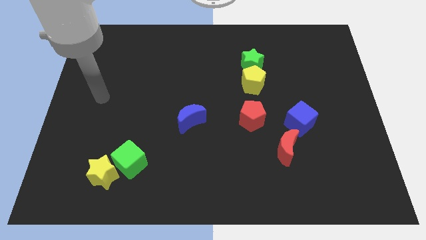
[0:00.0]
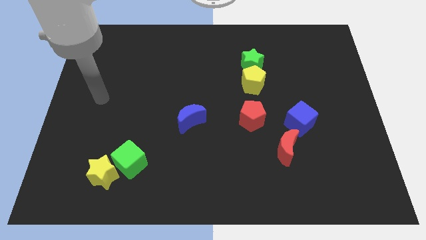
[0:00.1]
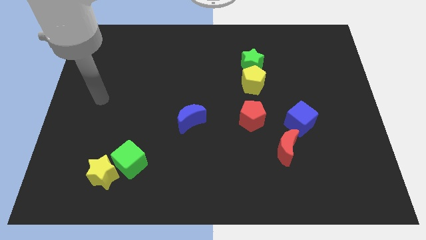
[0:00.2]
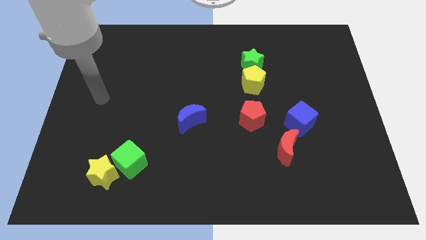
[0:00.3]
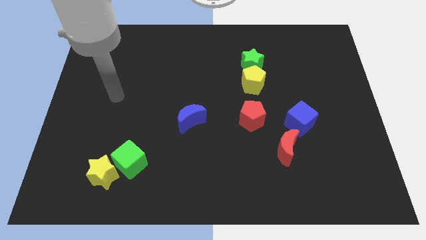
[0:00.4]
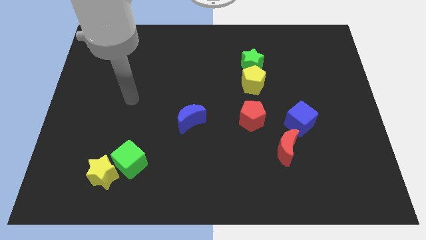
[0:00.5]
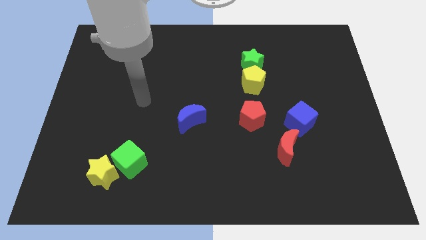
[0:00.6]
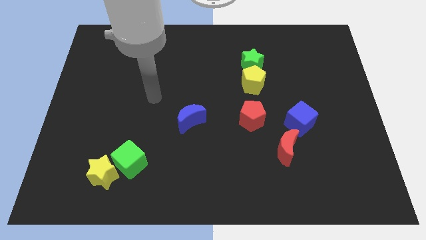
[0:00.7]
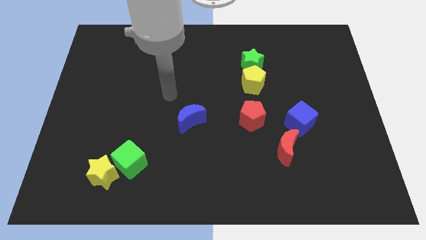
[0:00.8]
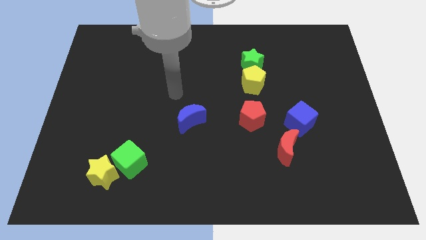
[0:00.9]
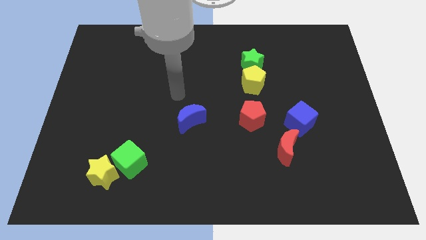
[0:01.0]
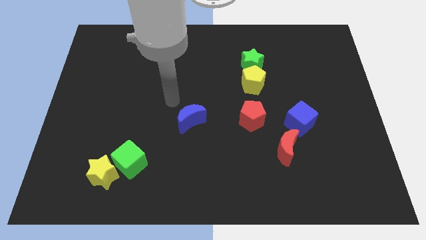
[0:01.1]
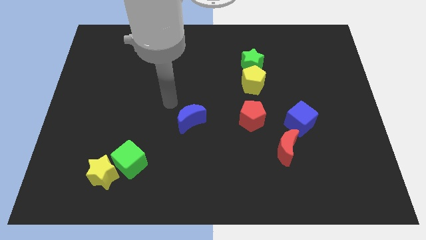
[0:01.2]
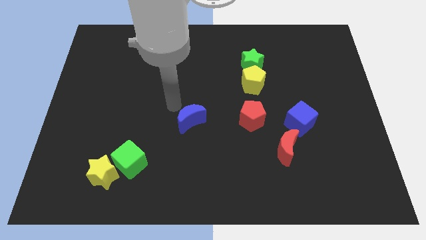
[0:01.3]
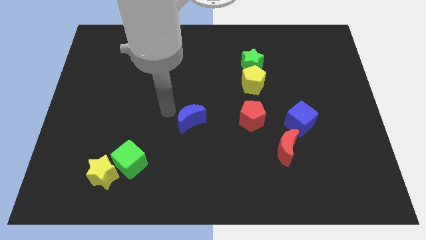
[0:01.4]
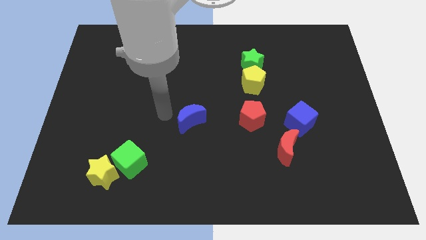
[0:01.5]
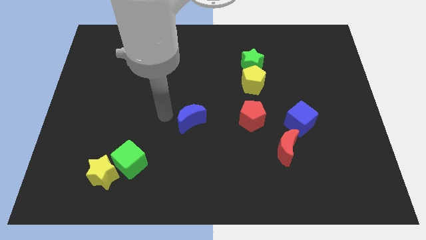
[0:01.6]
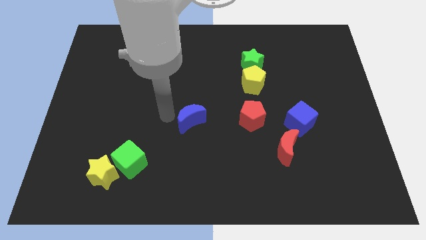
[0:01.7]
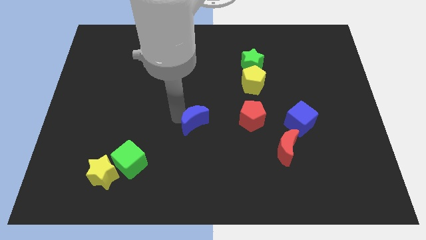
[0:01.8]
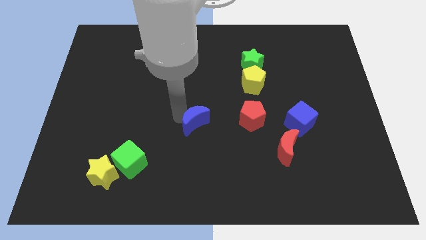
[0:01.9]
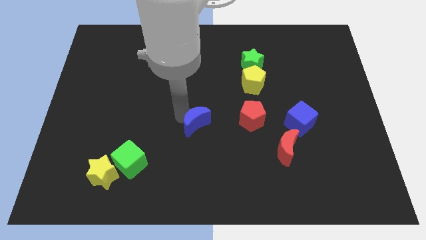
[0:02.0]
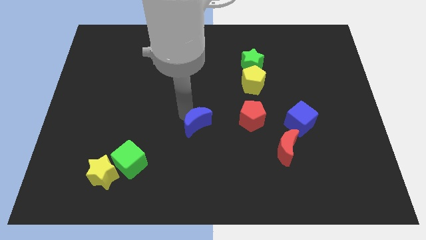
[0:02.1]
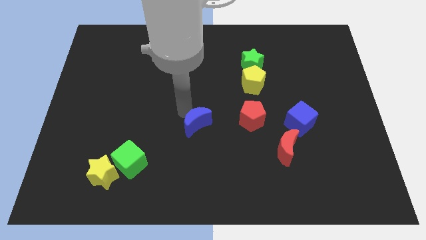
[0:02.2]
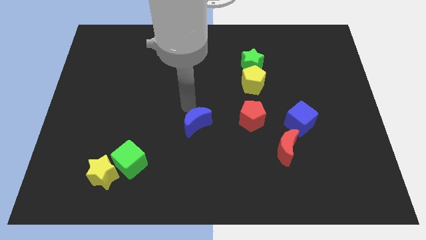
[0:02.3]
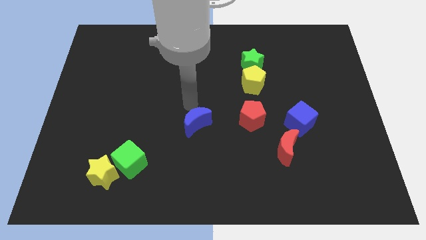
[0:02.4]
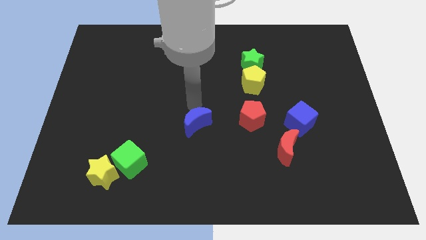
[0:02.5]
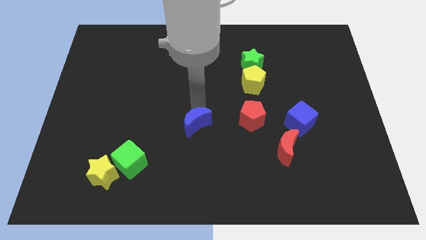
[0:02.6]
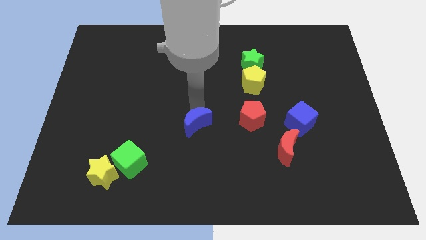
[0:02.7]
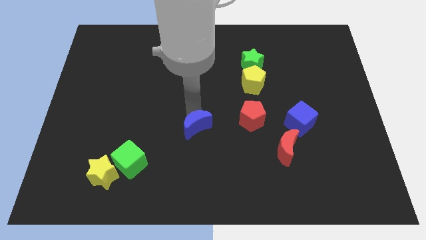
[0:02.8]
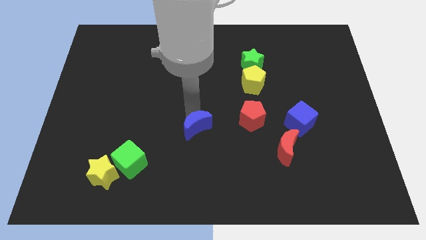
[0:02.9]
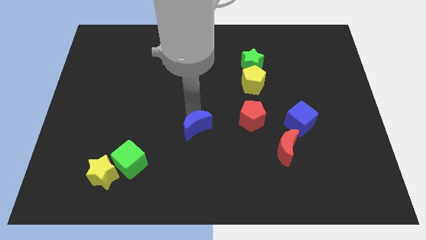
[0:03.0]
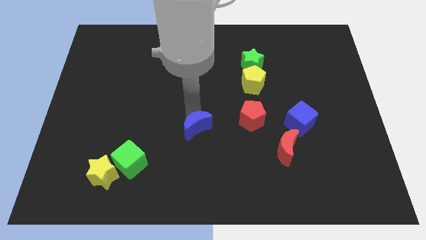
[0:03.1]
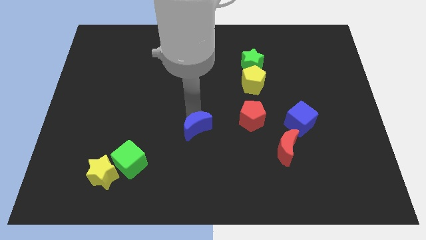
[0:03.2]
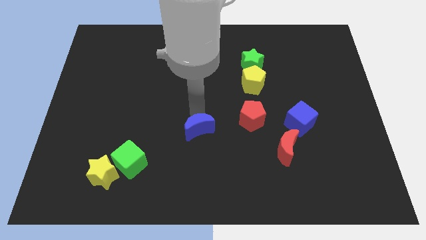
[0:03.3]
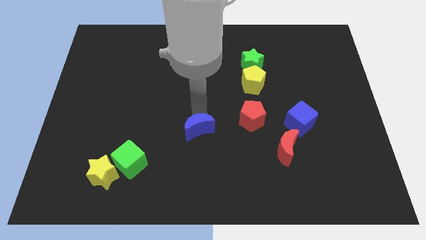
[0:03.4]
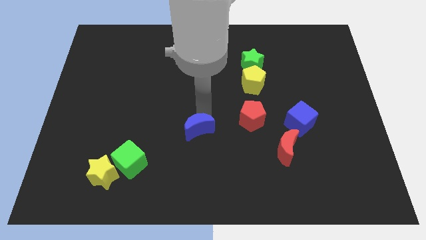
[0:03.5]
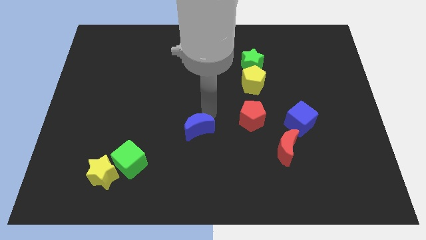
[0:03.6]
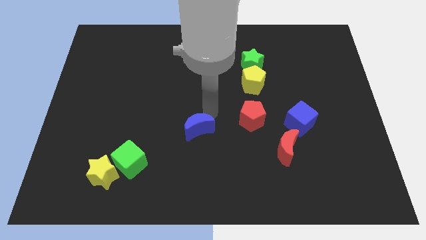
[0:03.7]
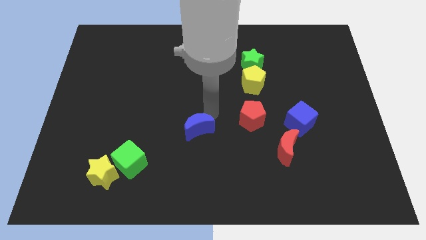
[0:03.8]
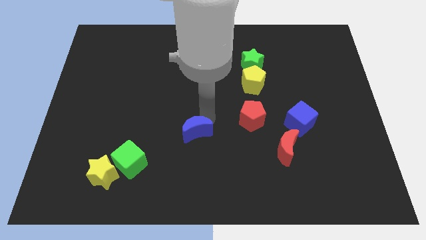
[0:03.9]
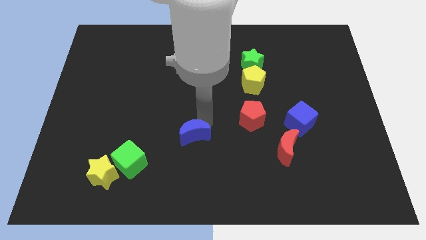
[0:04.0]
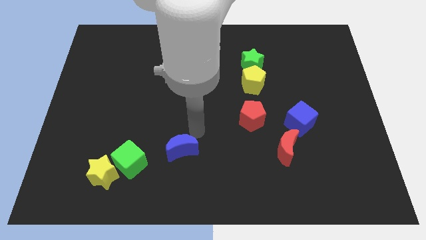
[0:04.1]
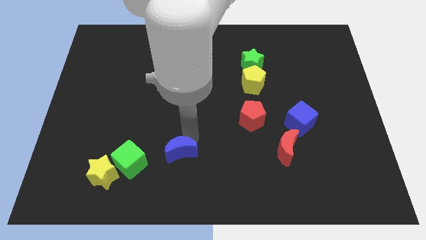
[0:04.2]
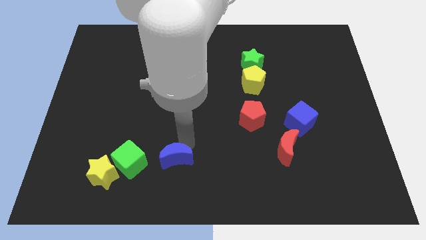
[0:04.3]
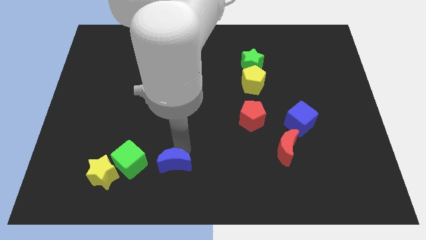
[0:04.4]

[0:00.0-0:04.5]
place the blue cube to the right side of the green cube

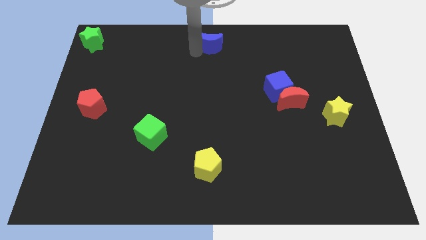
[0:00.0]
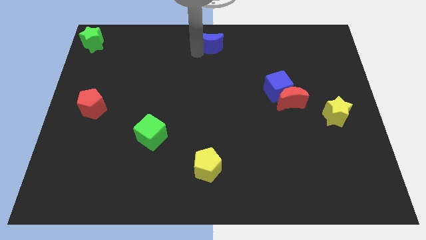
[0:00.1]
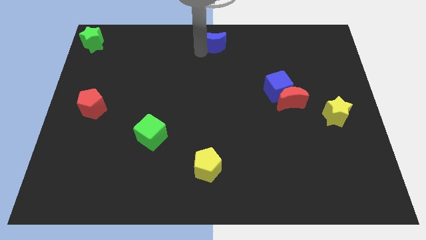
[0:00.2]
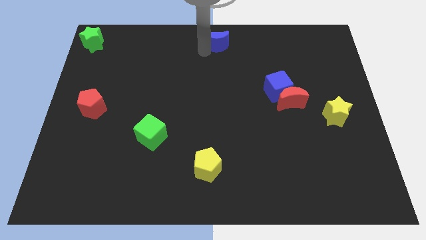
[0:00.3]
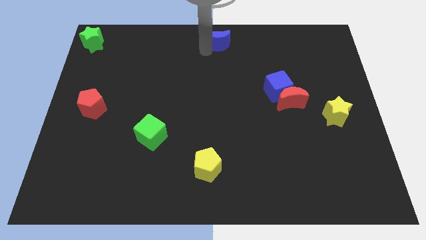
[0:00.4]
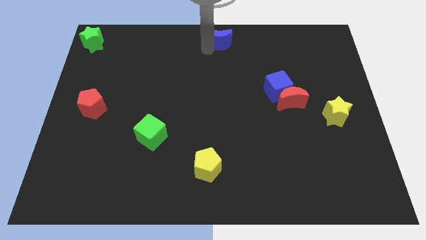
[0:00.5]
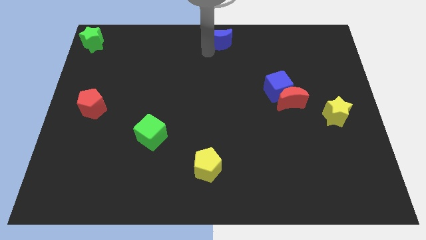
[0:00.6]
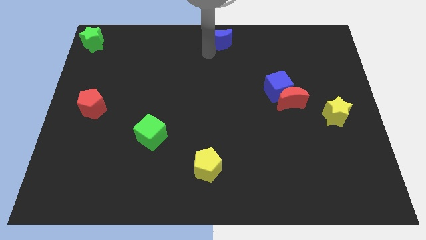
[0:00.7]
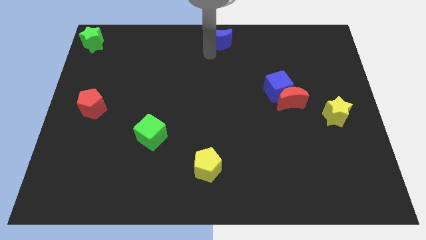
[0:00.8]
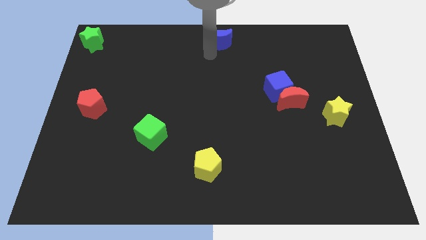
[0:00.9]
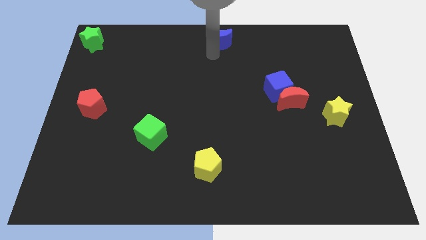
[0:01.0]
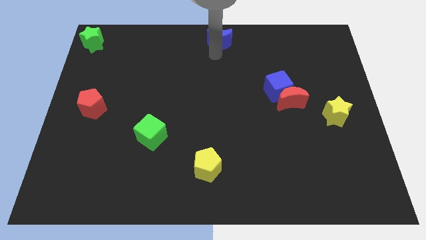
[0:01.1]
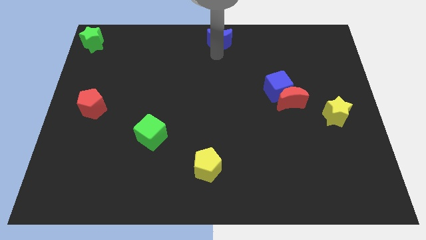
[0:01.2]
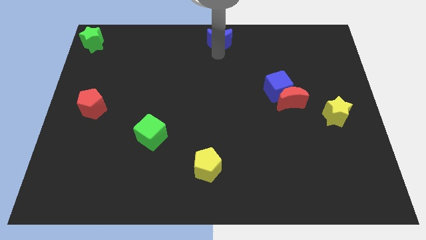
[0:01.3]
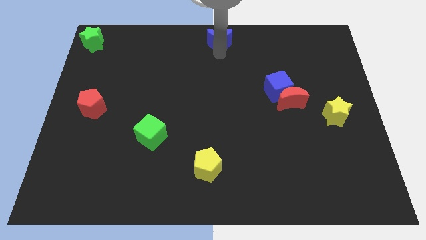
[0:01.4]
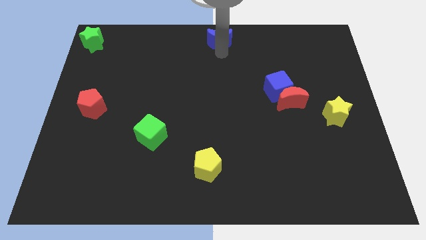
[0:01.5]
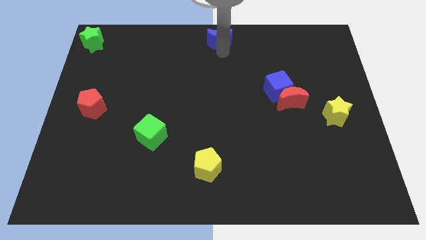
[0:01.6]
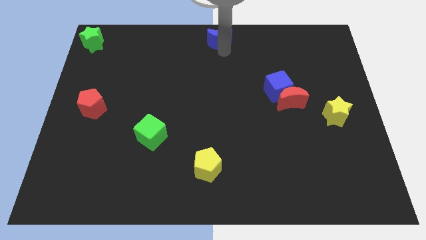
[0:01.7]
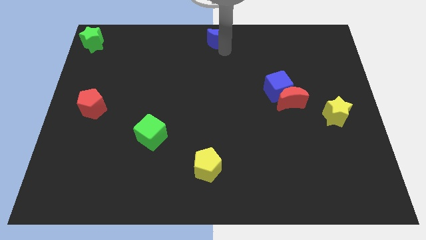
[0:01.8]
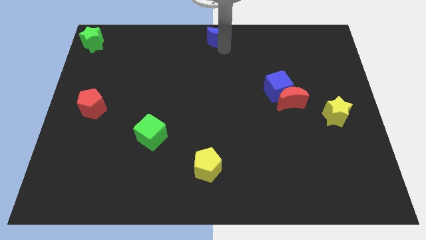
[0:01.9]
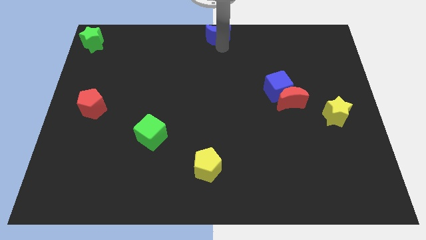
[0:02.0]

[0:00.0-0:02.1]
place blue moon at the top center of the board

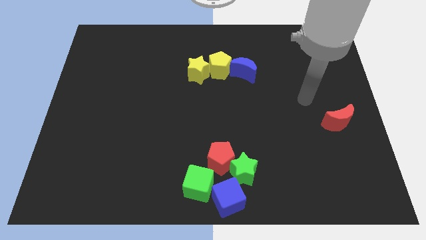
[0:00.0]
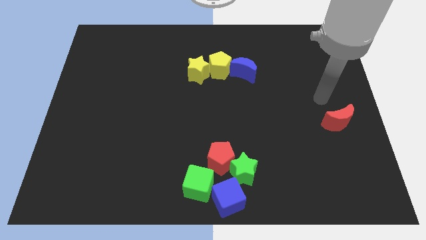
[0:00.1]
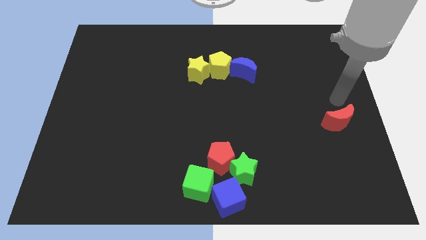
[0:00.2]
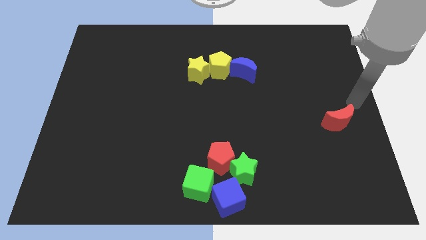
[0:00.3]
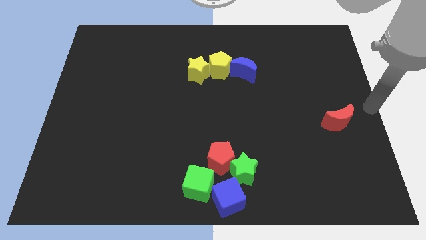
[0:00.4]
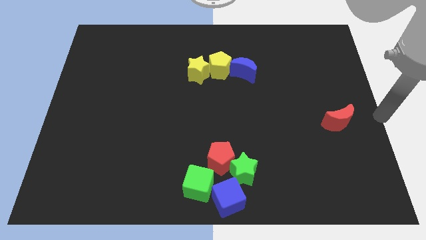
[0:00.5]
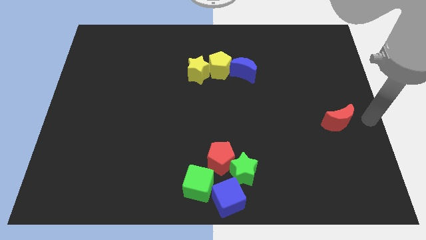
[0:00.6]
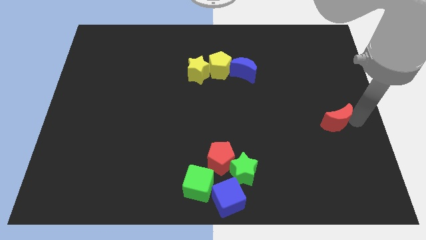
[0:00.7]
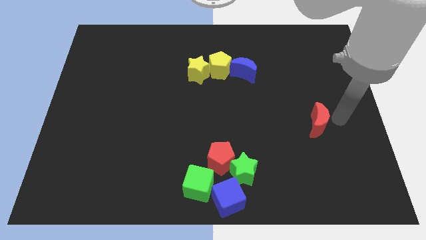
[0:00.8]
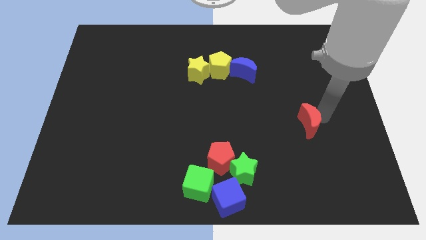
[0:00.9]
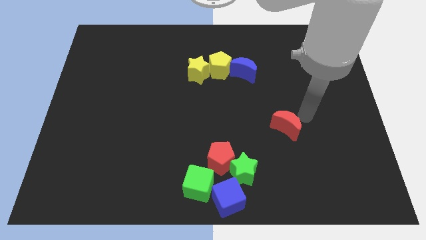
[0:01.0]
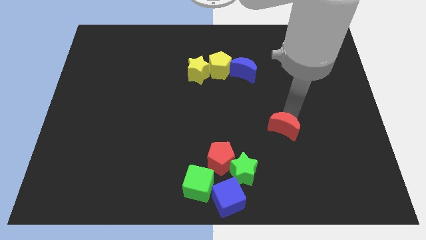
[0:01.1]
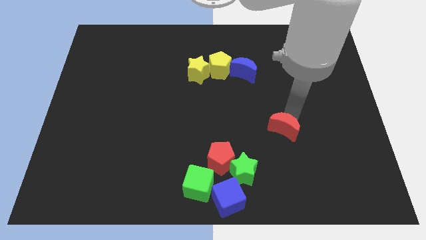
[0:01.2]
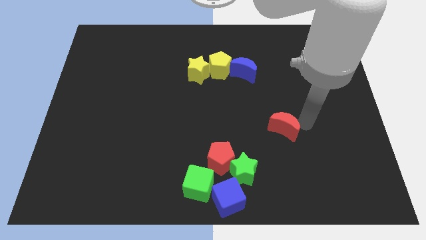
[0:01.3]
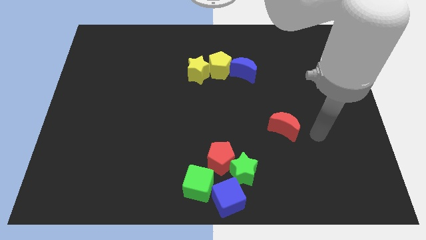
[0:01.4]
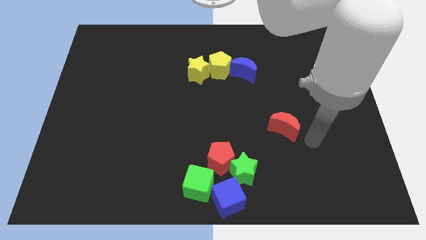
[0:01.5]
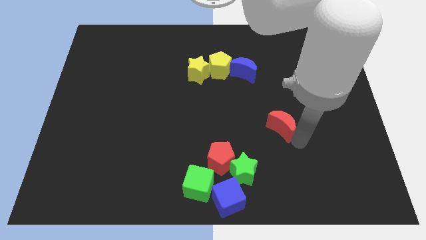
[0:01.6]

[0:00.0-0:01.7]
move the red crescent slightly left side

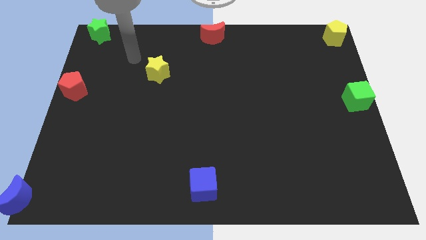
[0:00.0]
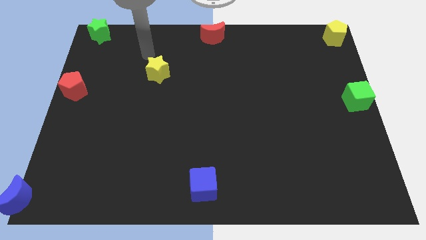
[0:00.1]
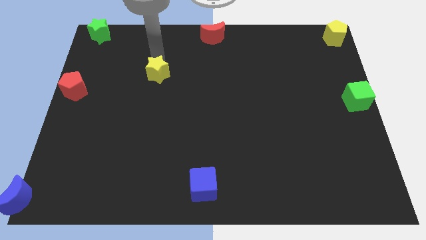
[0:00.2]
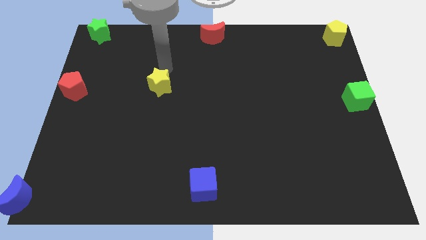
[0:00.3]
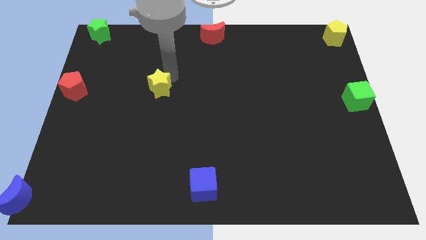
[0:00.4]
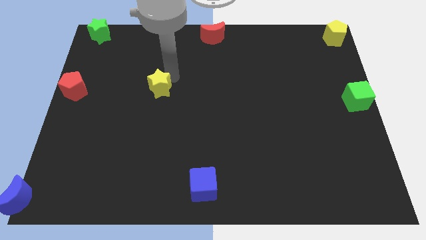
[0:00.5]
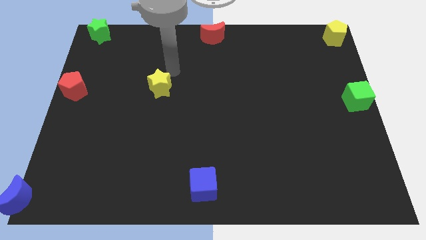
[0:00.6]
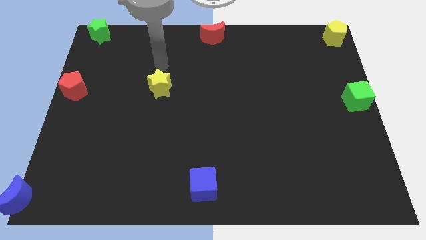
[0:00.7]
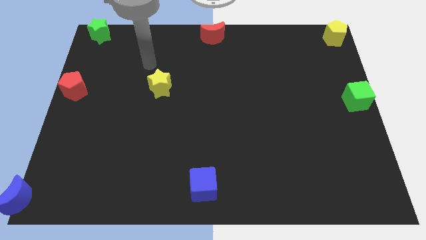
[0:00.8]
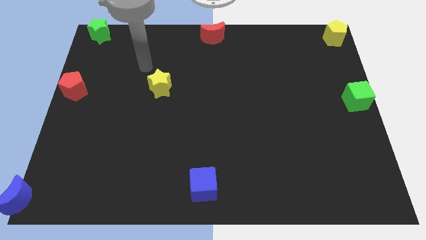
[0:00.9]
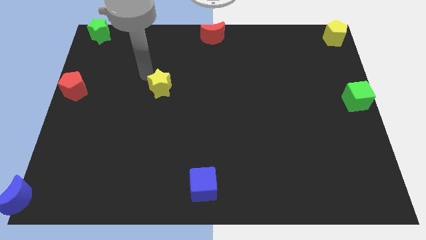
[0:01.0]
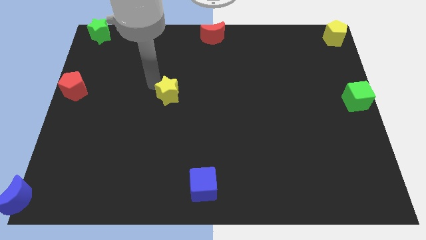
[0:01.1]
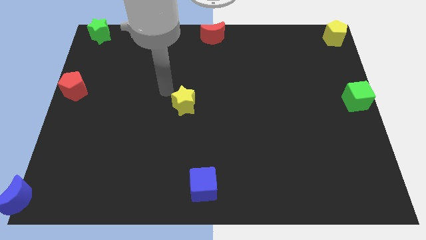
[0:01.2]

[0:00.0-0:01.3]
push the yellow star towards the center of the board
